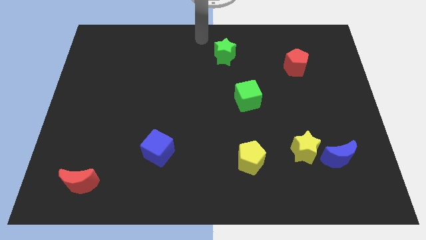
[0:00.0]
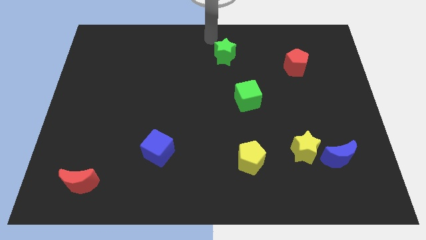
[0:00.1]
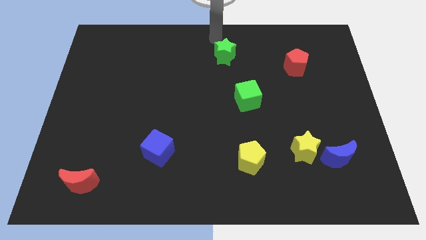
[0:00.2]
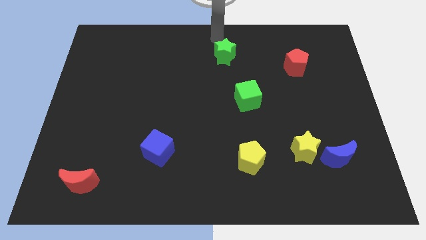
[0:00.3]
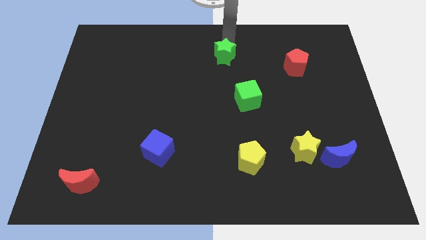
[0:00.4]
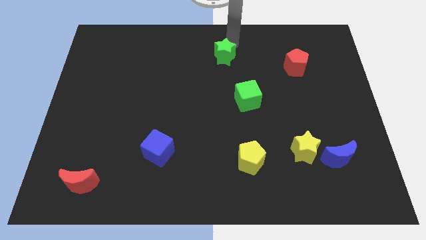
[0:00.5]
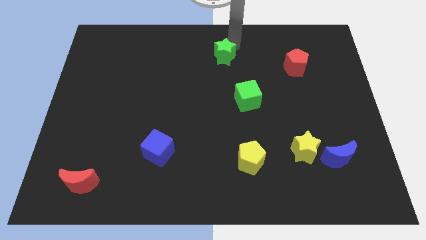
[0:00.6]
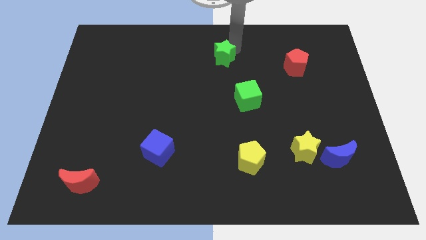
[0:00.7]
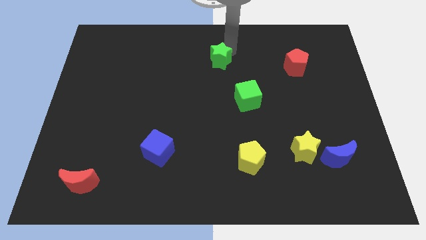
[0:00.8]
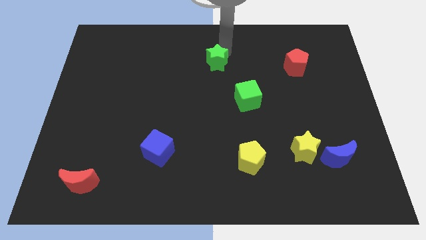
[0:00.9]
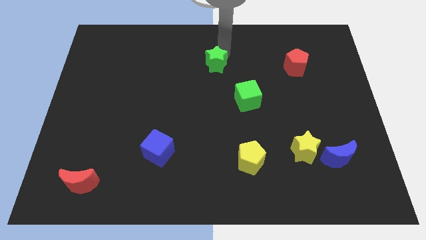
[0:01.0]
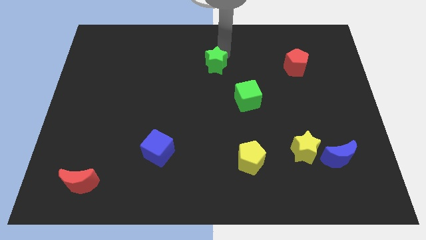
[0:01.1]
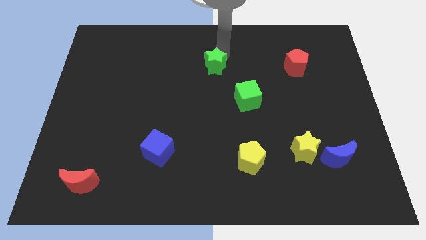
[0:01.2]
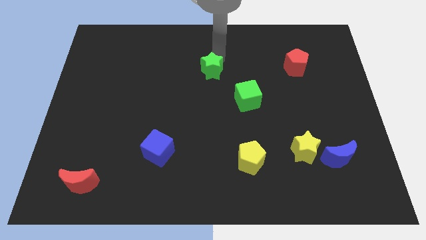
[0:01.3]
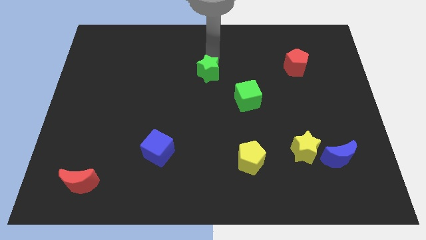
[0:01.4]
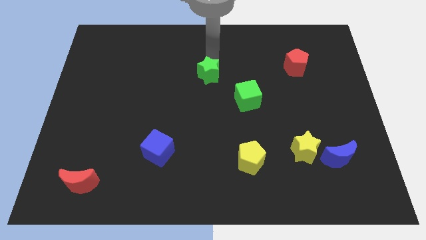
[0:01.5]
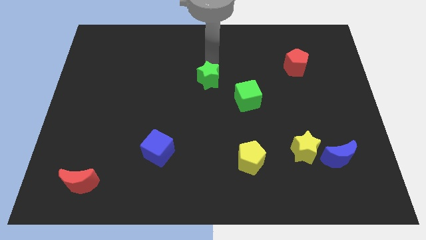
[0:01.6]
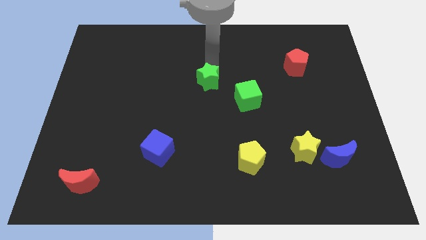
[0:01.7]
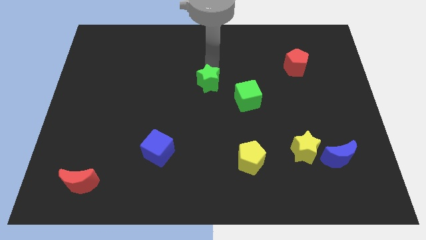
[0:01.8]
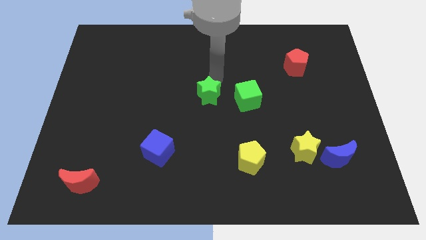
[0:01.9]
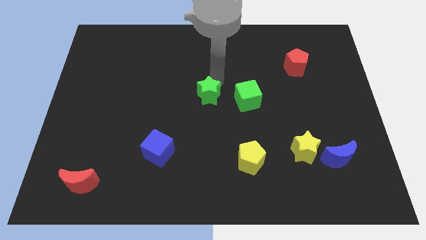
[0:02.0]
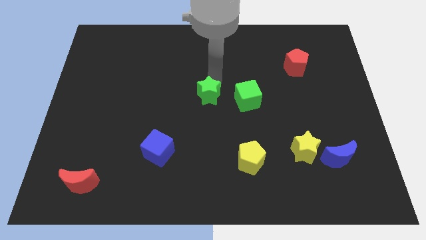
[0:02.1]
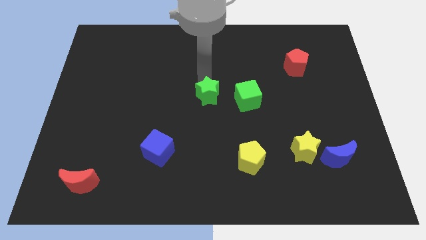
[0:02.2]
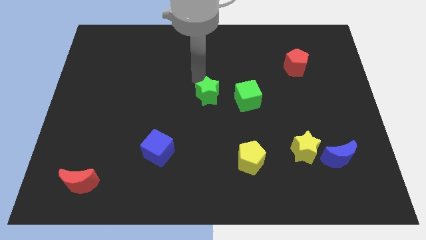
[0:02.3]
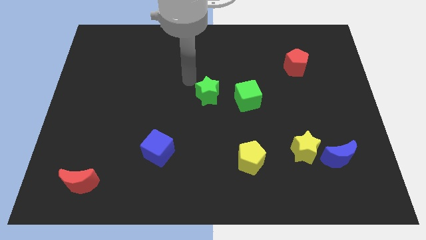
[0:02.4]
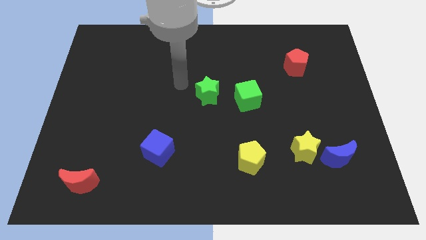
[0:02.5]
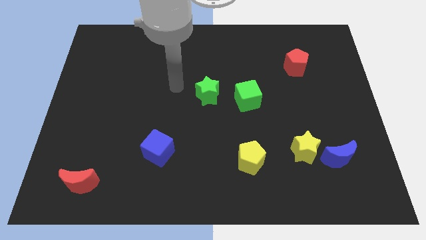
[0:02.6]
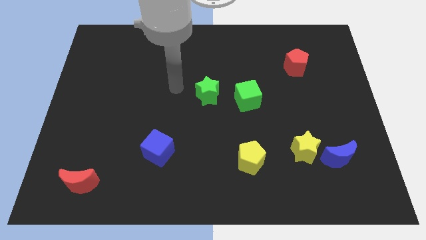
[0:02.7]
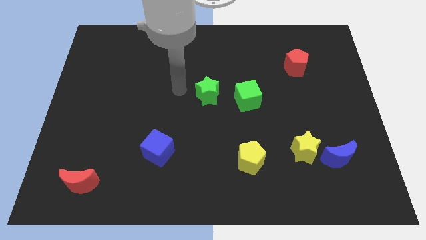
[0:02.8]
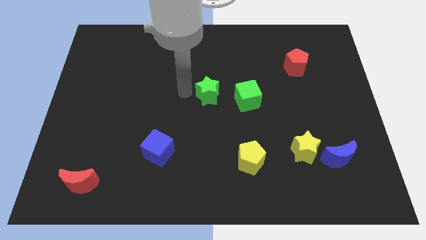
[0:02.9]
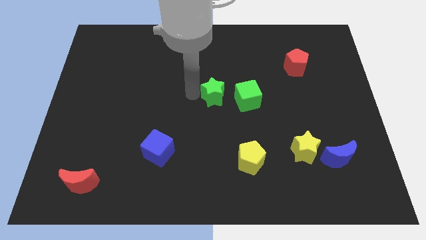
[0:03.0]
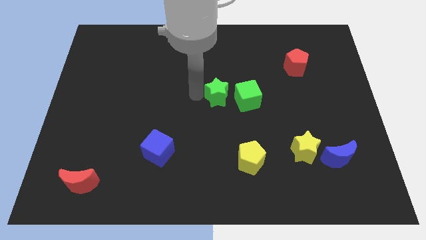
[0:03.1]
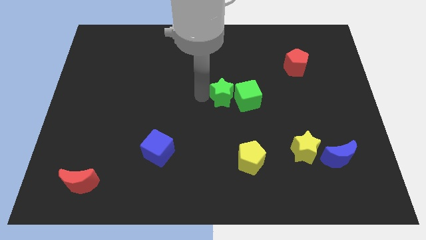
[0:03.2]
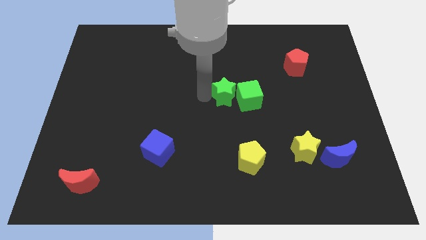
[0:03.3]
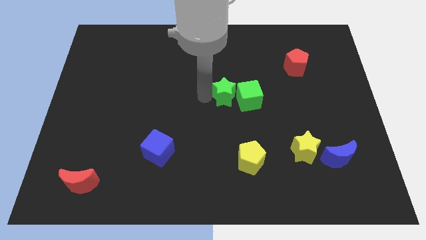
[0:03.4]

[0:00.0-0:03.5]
drag the green star into the left side of the green cube

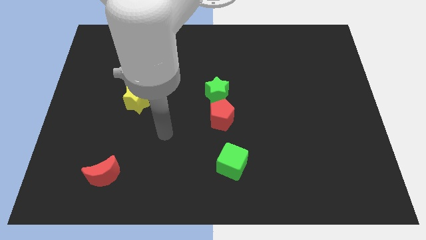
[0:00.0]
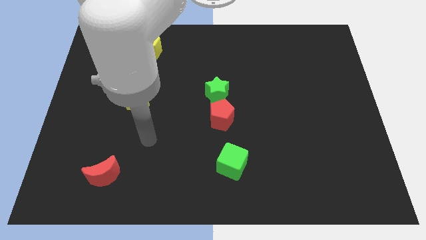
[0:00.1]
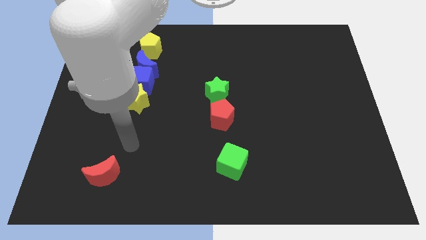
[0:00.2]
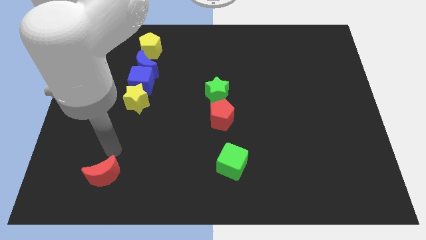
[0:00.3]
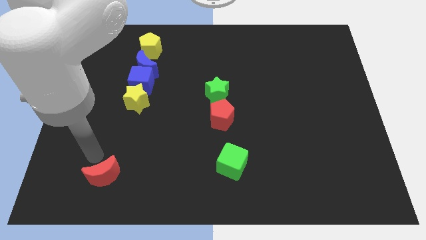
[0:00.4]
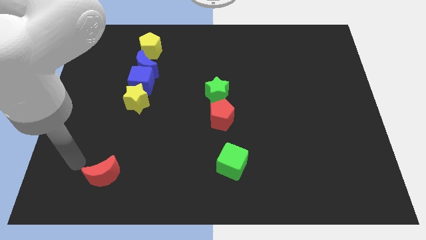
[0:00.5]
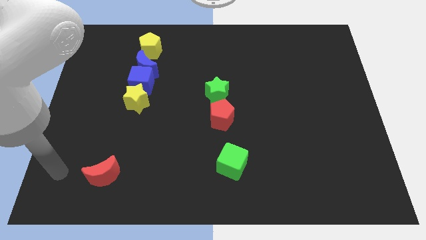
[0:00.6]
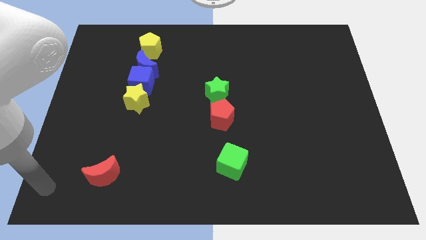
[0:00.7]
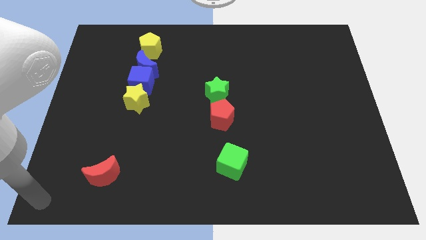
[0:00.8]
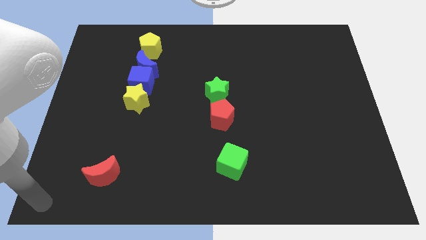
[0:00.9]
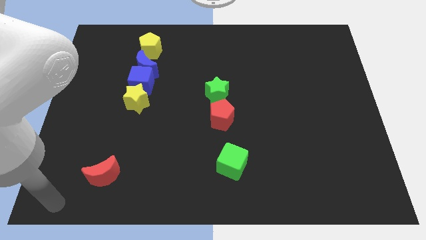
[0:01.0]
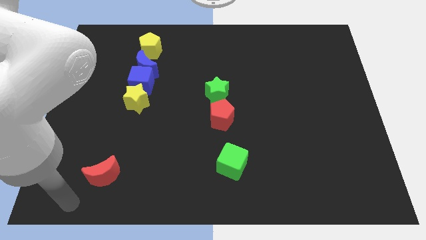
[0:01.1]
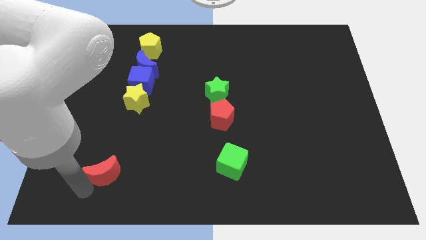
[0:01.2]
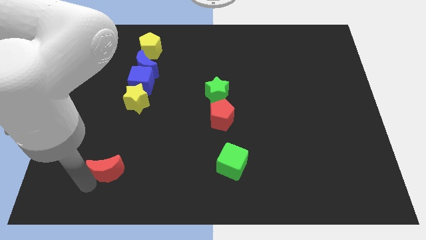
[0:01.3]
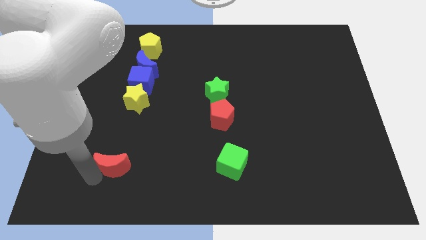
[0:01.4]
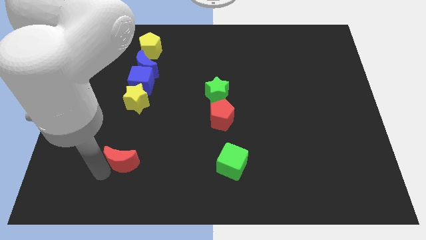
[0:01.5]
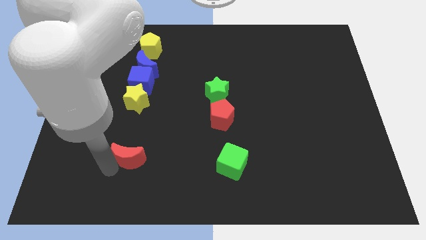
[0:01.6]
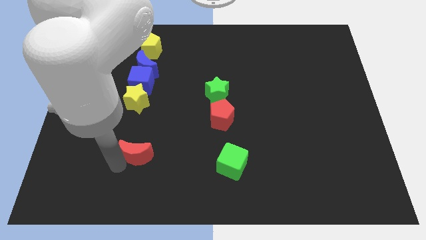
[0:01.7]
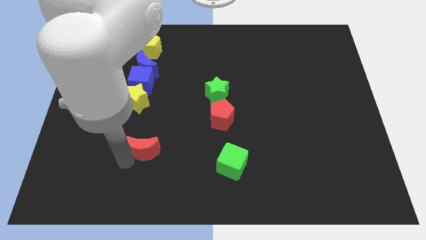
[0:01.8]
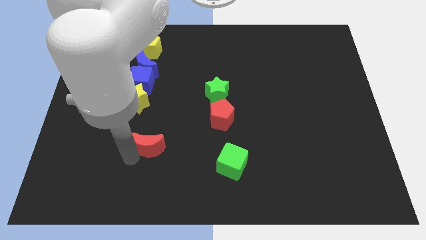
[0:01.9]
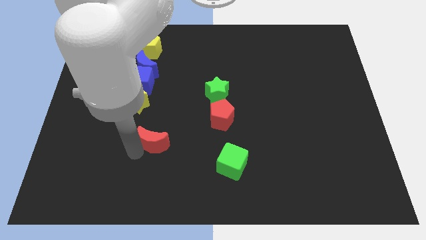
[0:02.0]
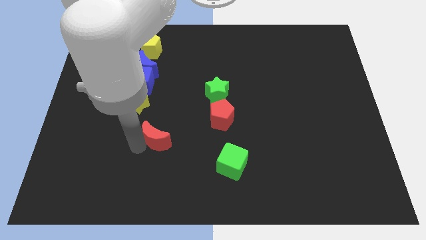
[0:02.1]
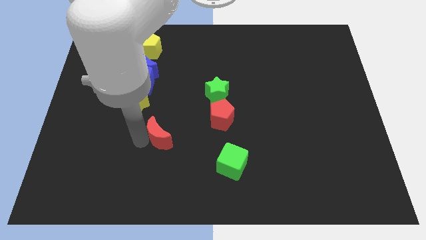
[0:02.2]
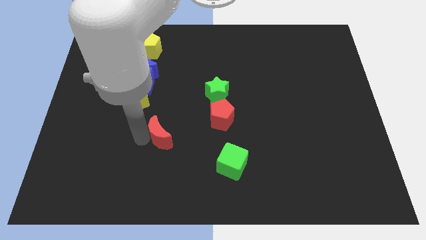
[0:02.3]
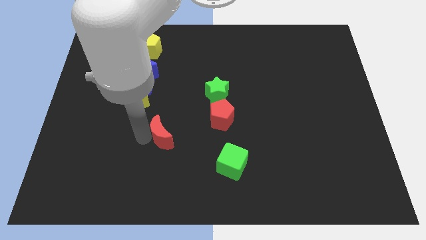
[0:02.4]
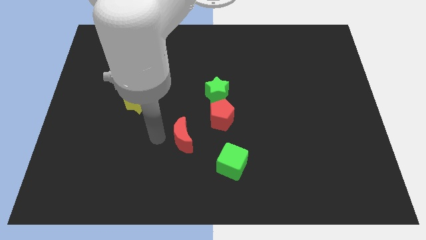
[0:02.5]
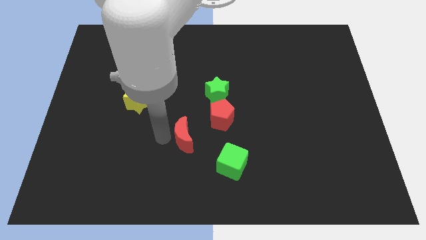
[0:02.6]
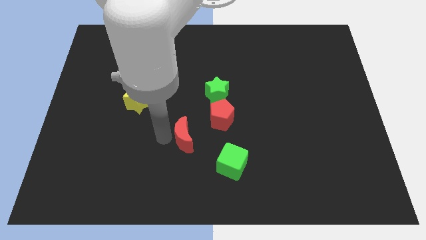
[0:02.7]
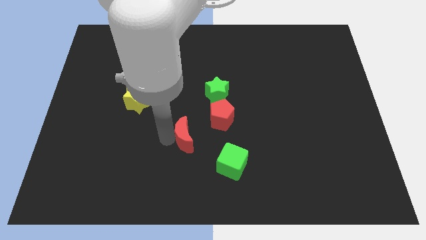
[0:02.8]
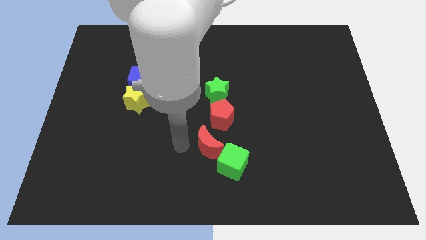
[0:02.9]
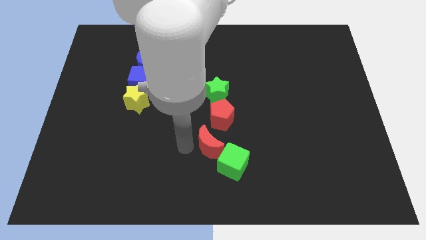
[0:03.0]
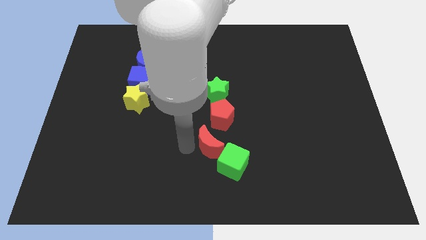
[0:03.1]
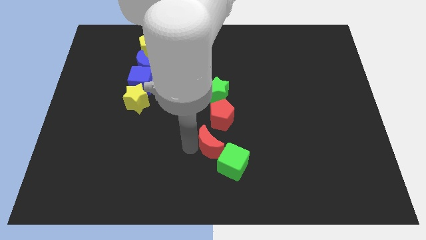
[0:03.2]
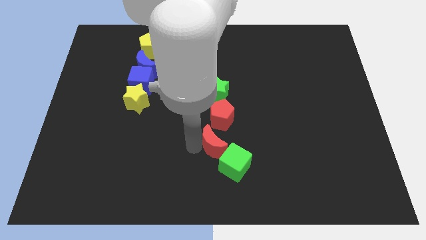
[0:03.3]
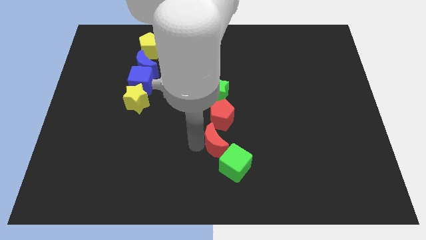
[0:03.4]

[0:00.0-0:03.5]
slide red moon into green cube

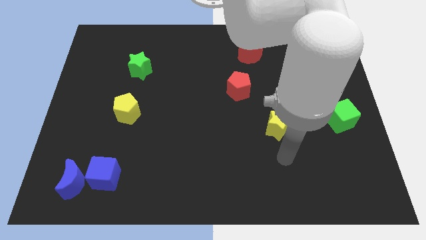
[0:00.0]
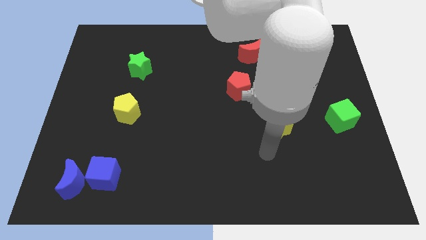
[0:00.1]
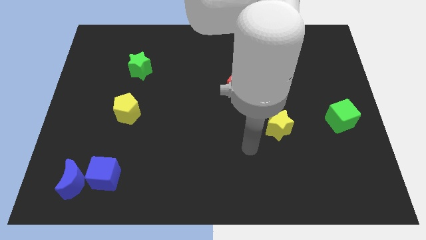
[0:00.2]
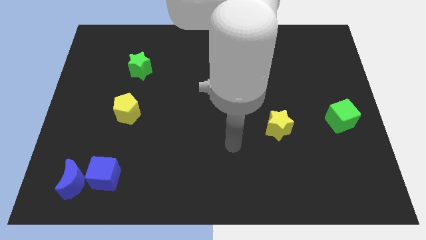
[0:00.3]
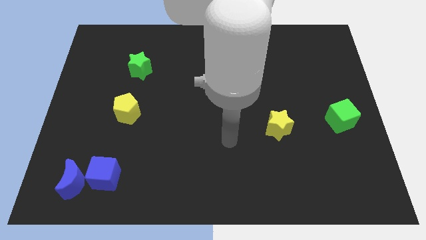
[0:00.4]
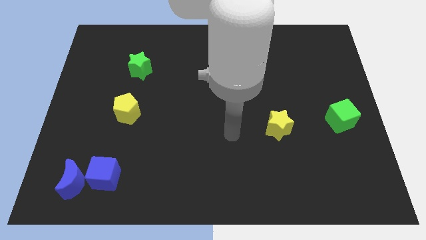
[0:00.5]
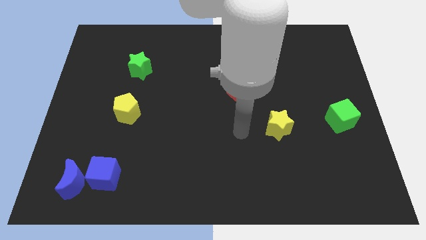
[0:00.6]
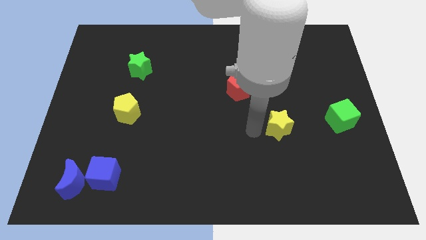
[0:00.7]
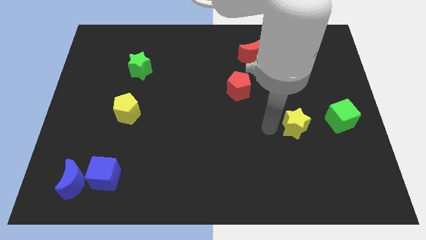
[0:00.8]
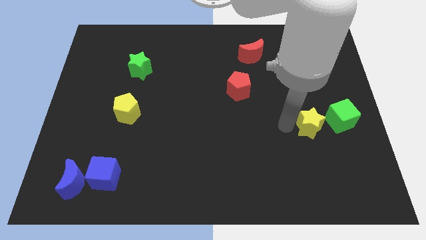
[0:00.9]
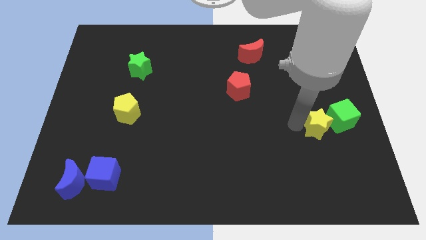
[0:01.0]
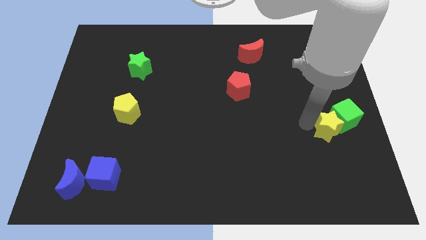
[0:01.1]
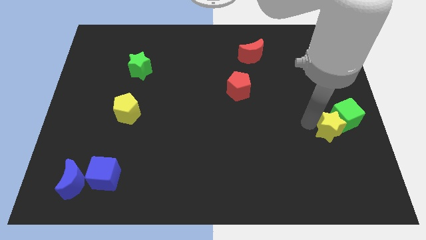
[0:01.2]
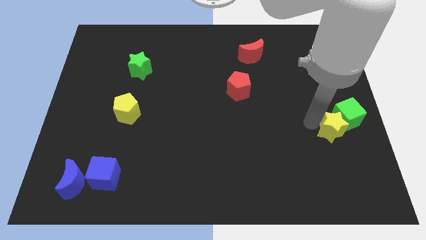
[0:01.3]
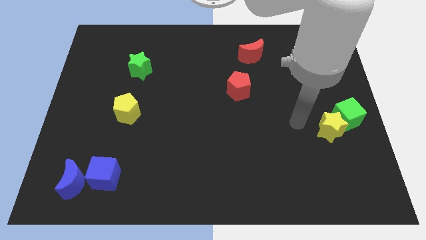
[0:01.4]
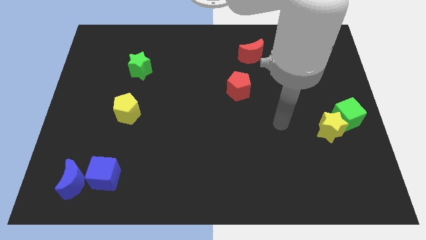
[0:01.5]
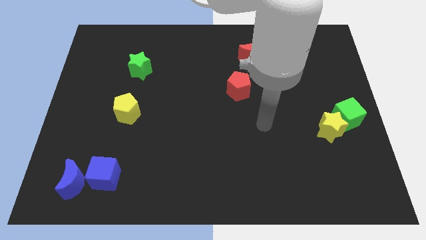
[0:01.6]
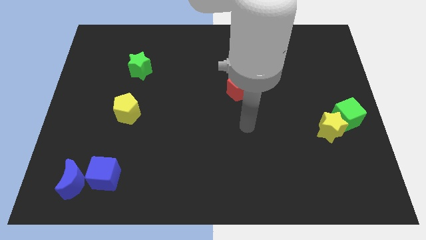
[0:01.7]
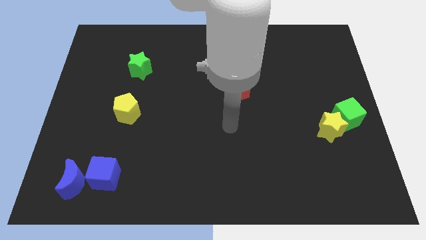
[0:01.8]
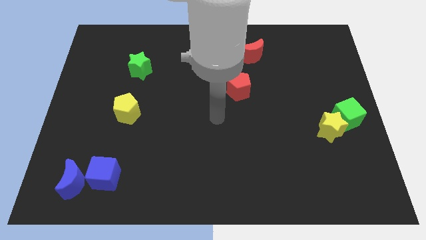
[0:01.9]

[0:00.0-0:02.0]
push yellow star into the green cube
